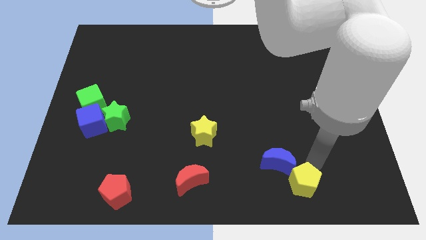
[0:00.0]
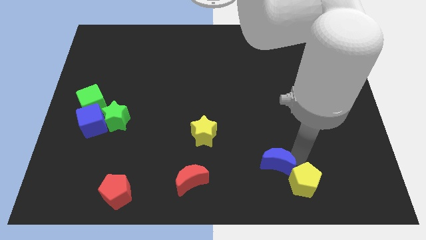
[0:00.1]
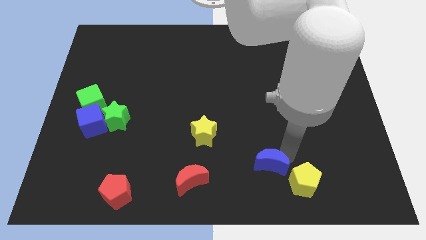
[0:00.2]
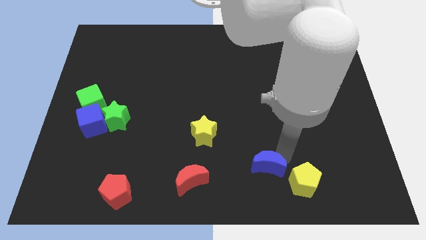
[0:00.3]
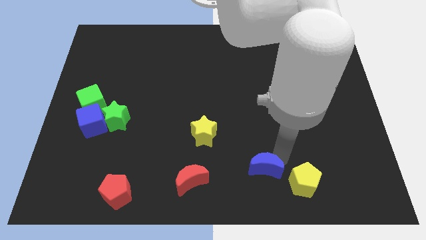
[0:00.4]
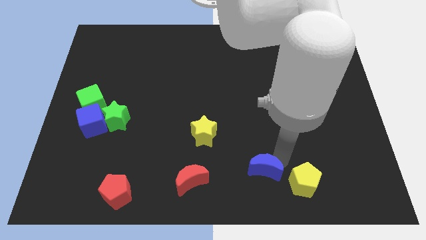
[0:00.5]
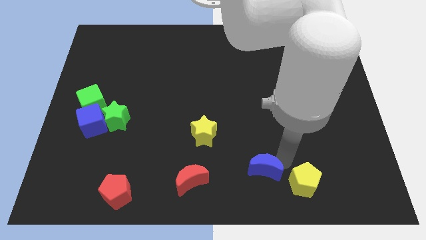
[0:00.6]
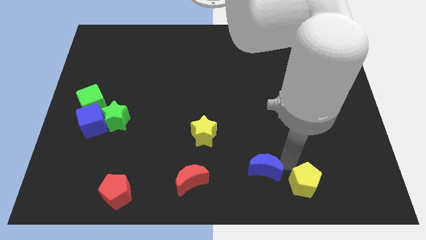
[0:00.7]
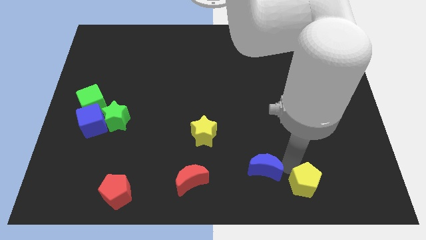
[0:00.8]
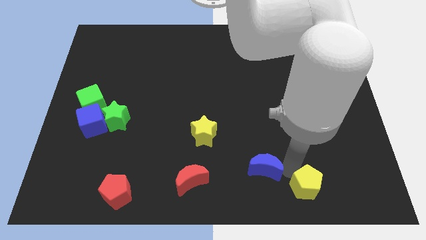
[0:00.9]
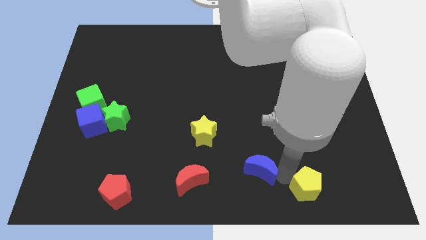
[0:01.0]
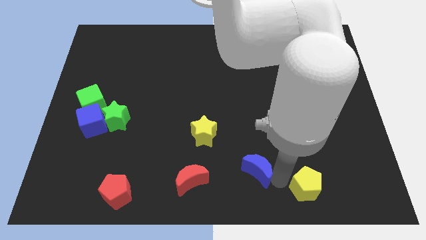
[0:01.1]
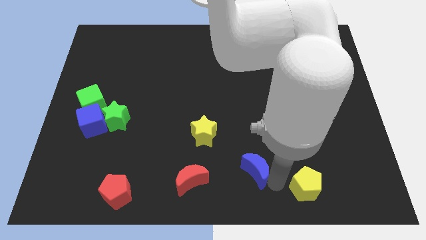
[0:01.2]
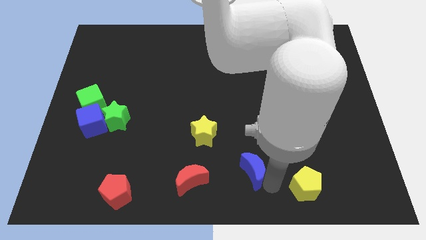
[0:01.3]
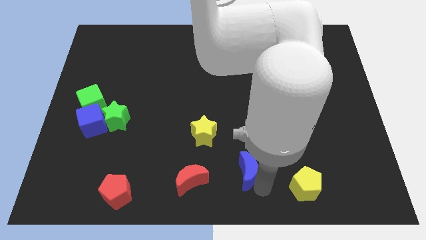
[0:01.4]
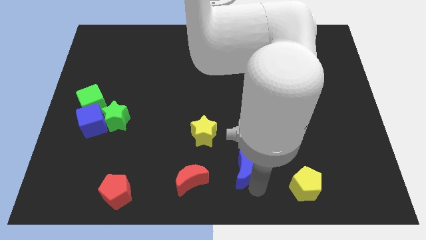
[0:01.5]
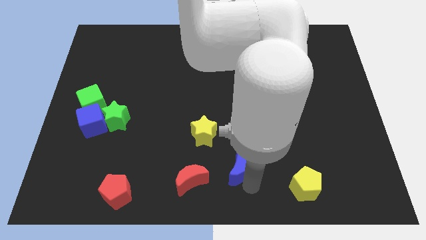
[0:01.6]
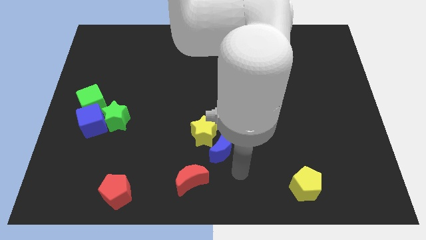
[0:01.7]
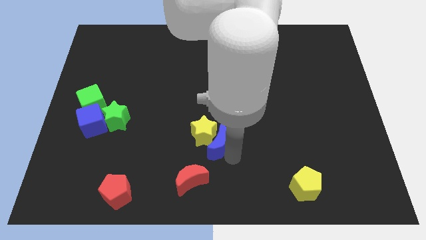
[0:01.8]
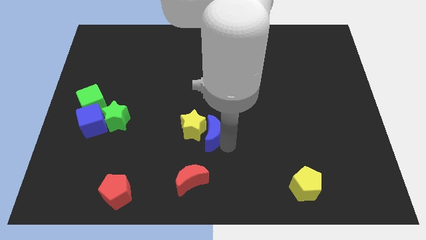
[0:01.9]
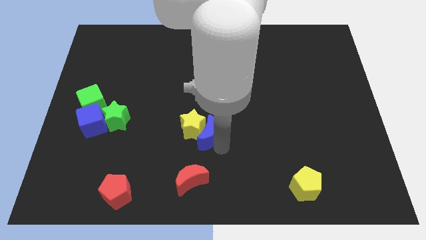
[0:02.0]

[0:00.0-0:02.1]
push the blue crescent into the yellow star

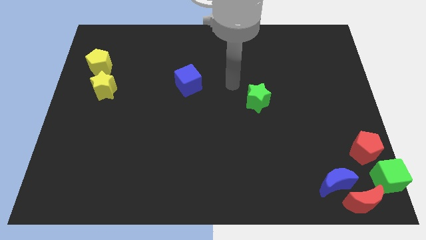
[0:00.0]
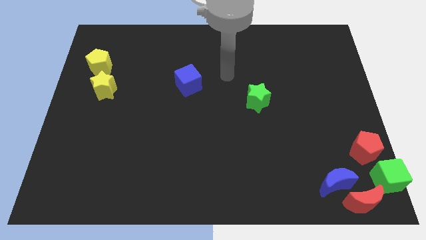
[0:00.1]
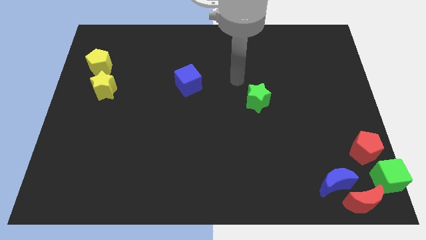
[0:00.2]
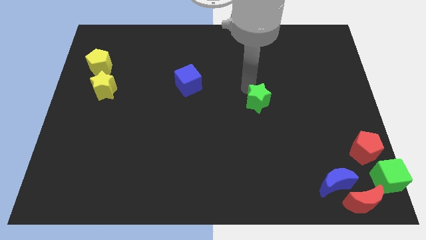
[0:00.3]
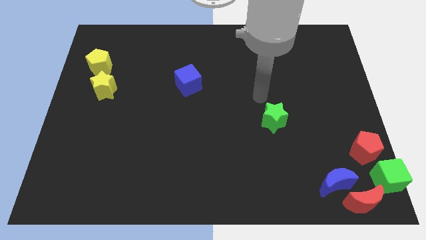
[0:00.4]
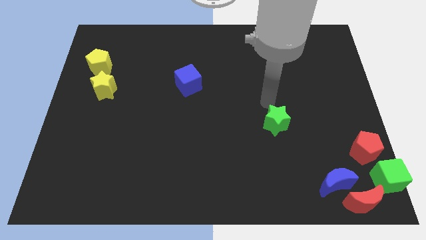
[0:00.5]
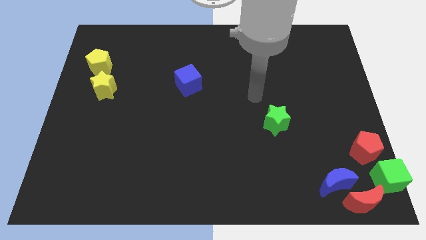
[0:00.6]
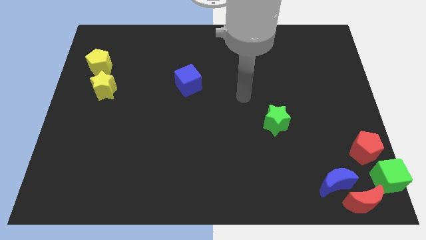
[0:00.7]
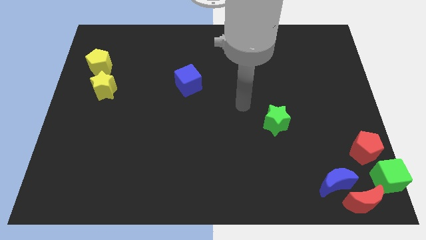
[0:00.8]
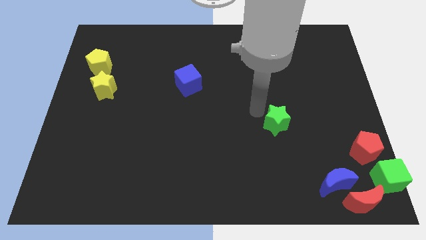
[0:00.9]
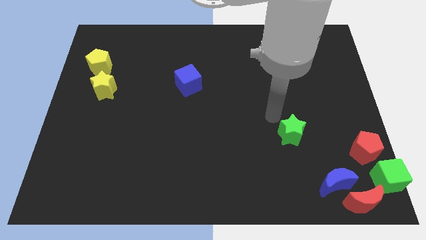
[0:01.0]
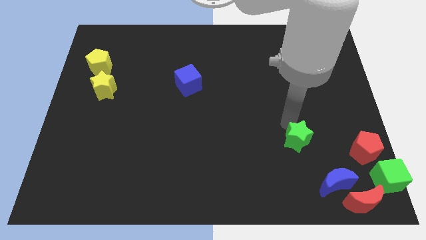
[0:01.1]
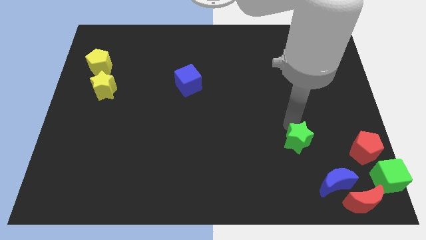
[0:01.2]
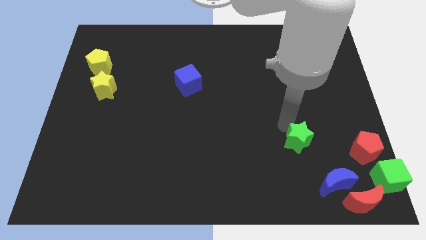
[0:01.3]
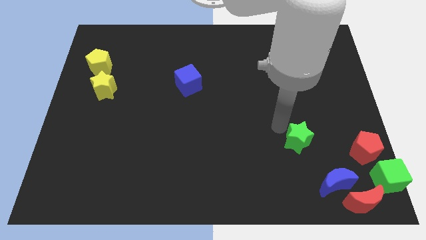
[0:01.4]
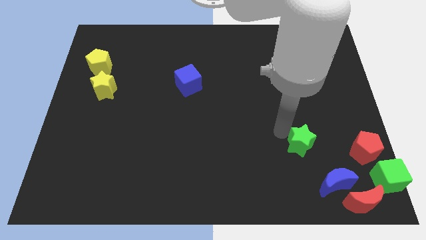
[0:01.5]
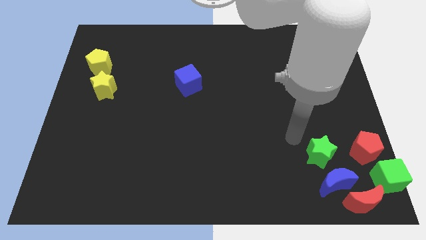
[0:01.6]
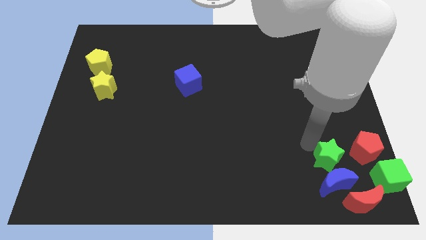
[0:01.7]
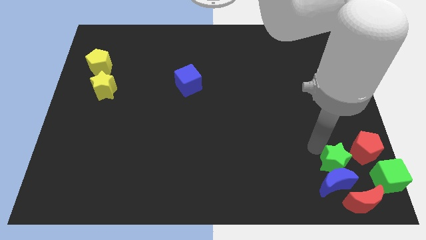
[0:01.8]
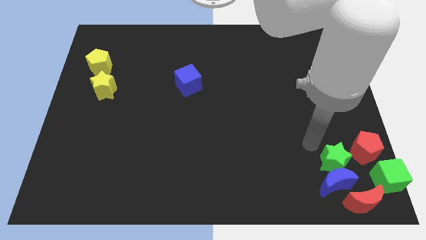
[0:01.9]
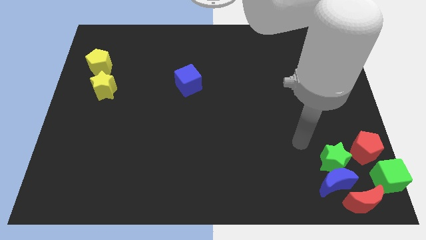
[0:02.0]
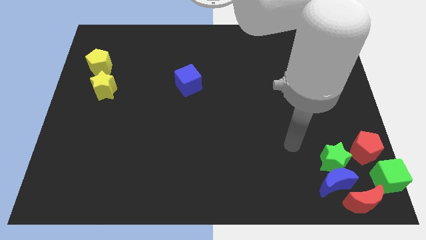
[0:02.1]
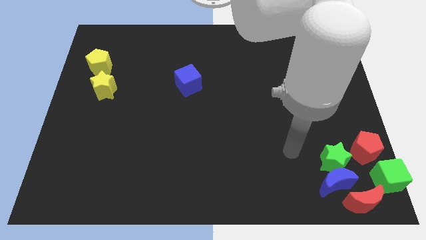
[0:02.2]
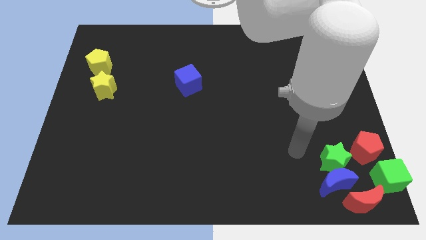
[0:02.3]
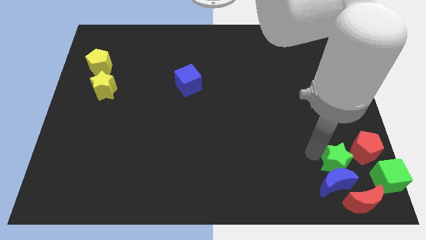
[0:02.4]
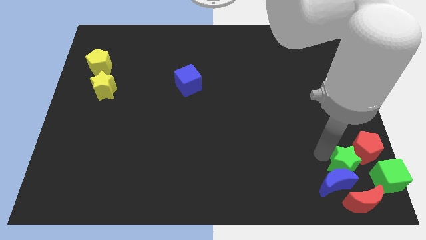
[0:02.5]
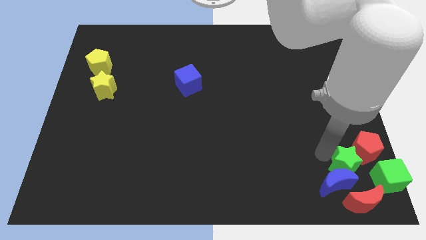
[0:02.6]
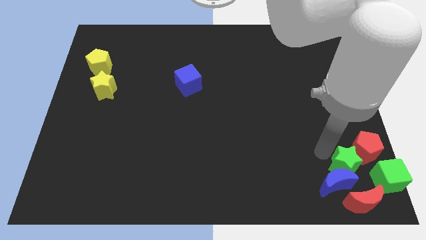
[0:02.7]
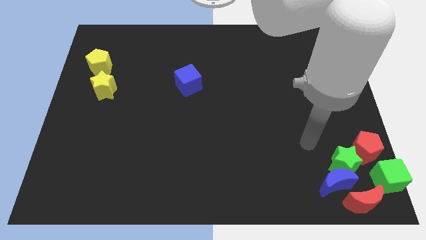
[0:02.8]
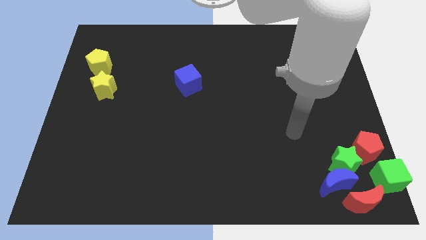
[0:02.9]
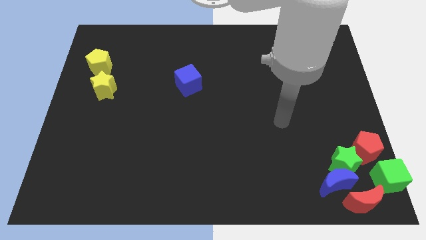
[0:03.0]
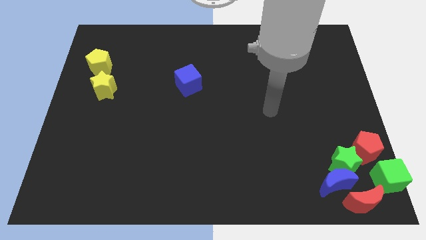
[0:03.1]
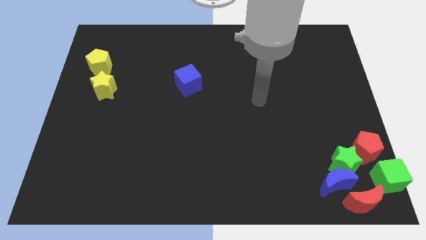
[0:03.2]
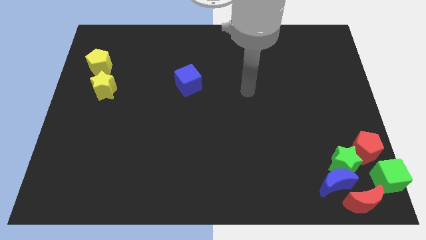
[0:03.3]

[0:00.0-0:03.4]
place the green star in between the red pentagon and blue crescent to form a diagnoal line

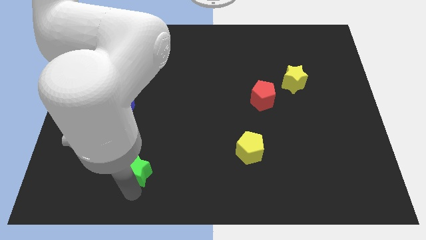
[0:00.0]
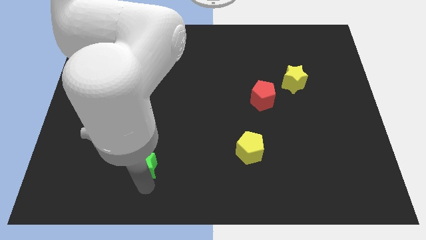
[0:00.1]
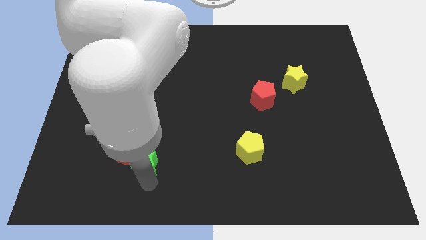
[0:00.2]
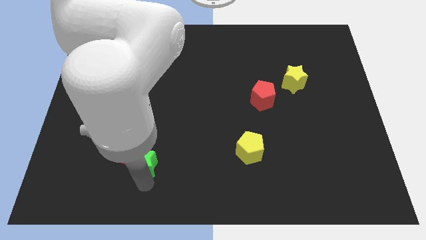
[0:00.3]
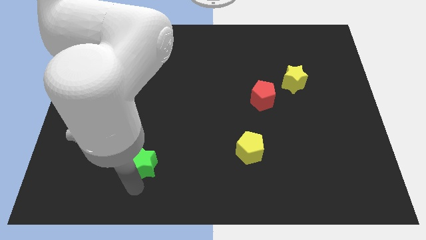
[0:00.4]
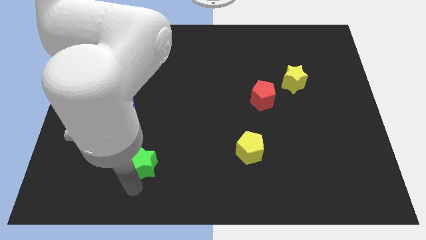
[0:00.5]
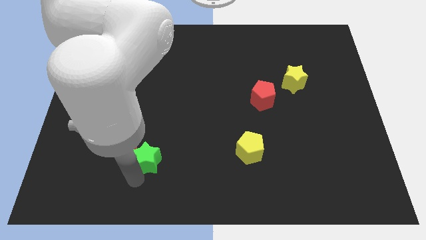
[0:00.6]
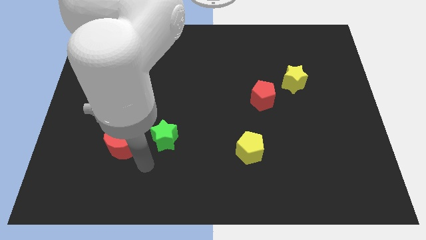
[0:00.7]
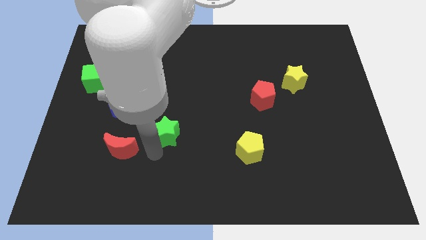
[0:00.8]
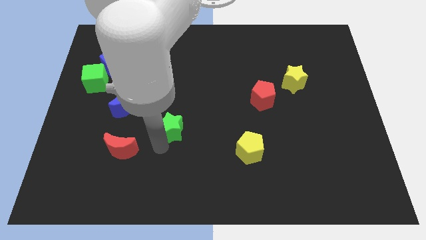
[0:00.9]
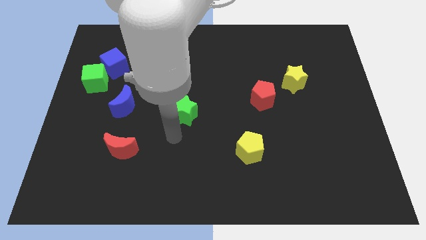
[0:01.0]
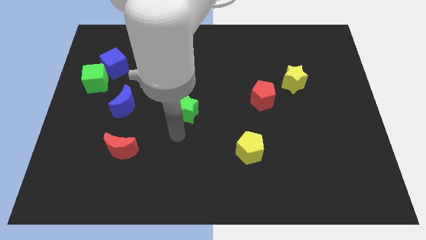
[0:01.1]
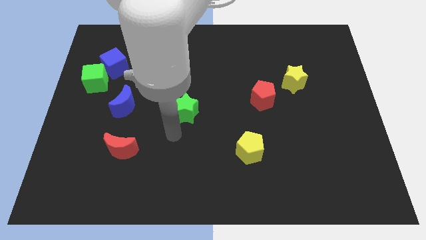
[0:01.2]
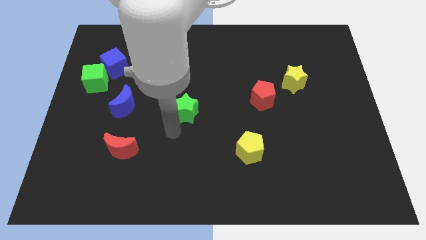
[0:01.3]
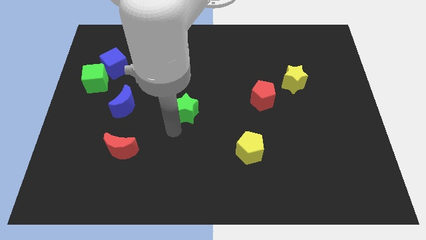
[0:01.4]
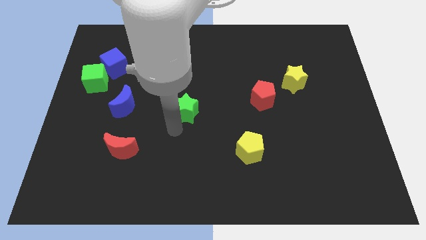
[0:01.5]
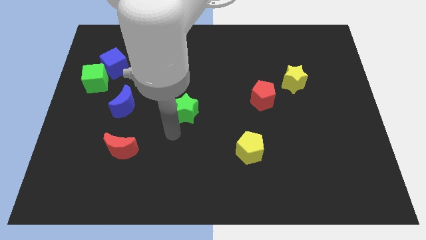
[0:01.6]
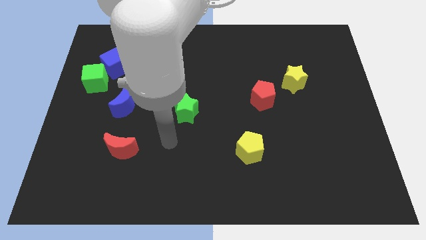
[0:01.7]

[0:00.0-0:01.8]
place the green star at the center

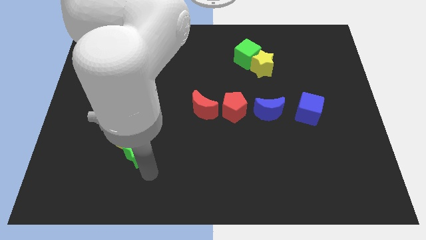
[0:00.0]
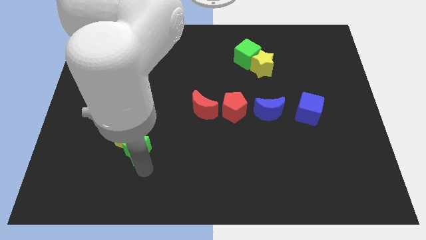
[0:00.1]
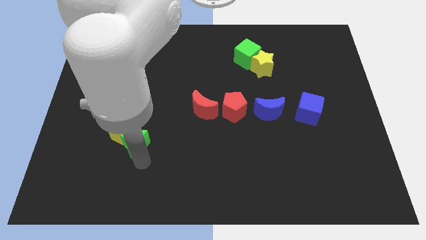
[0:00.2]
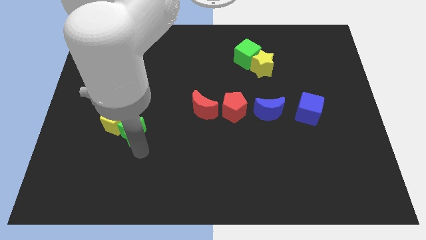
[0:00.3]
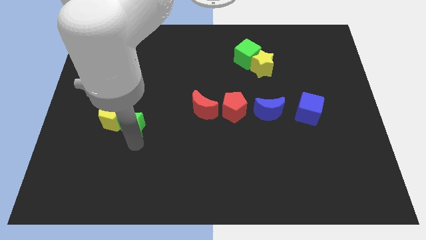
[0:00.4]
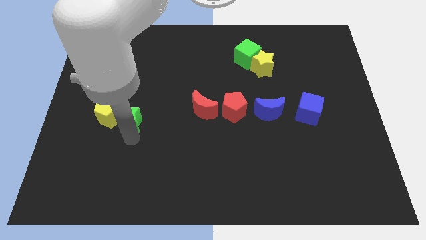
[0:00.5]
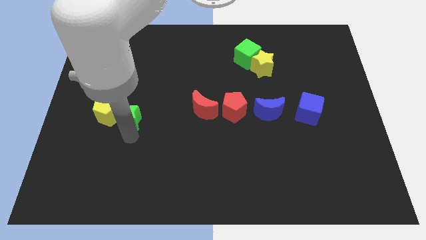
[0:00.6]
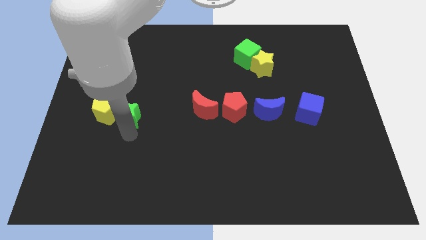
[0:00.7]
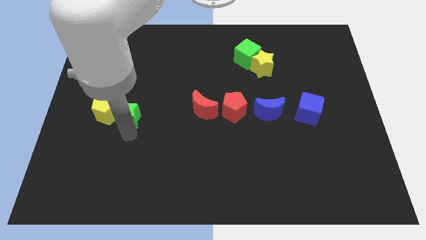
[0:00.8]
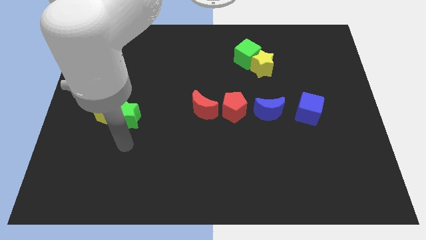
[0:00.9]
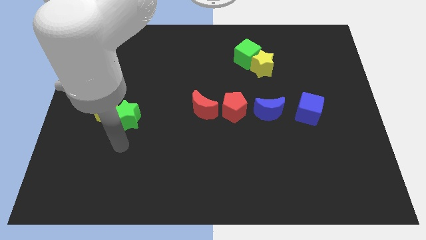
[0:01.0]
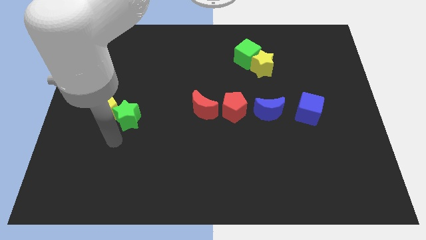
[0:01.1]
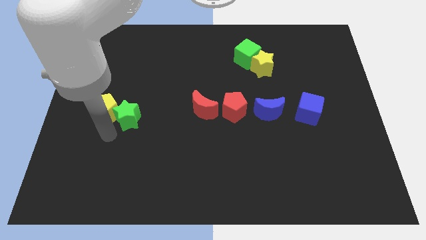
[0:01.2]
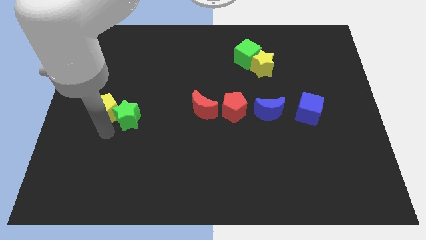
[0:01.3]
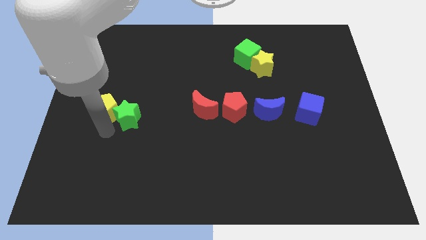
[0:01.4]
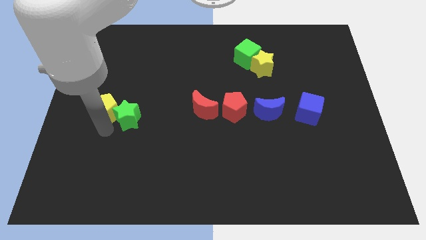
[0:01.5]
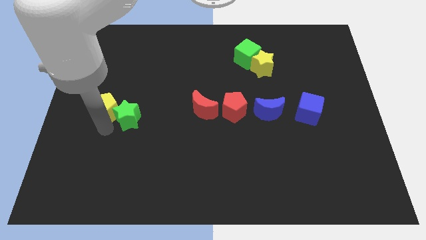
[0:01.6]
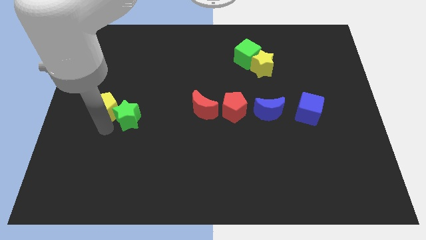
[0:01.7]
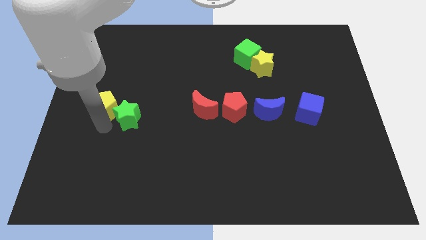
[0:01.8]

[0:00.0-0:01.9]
slide the green star and the yellow pentagon up slightly
